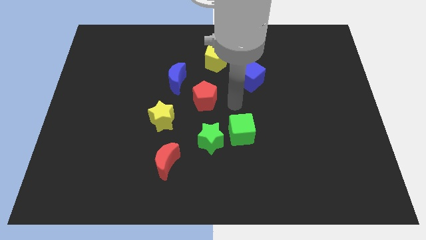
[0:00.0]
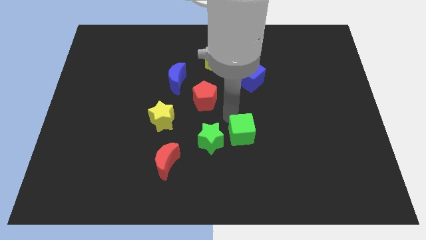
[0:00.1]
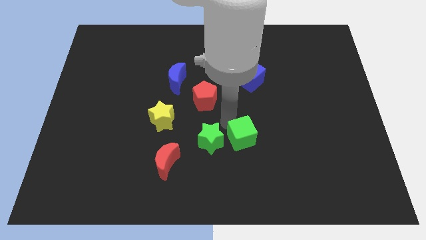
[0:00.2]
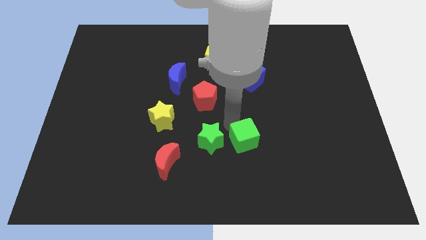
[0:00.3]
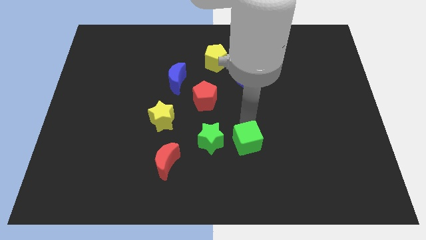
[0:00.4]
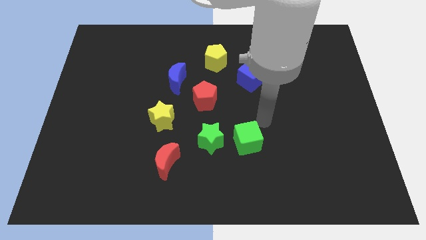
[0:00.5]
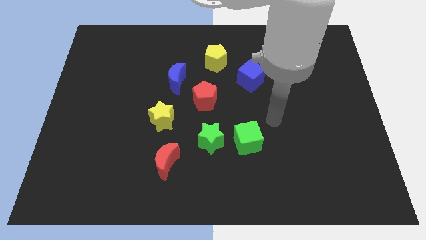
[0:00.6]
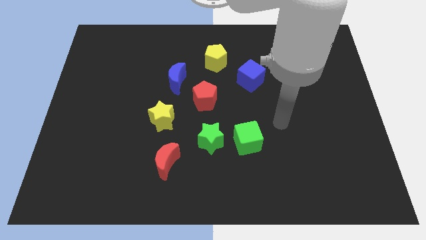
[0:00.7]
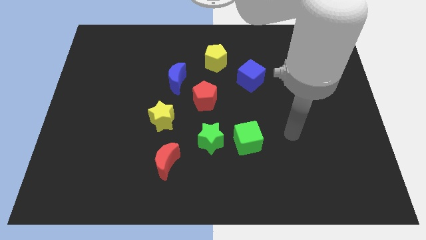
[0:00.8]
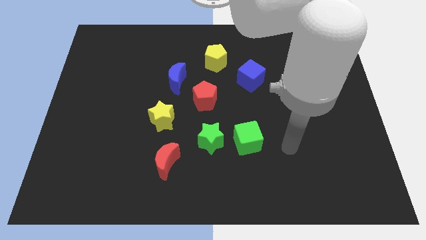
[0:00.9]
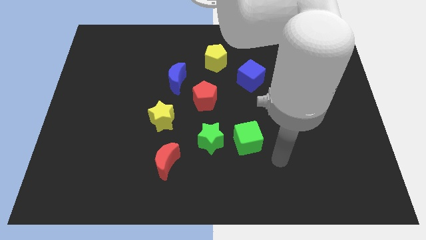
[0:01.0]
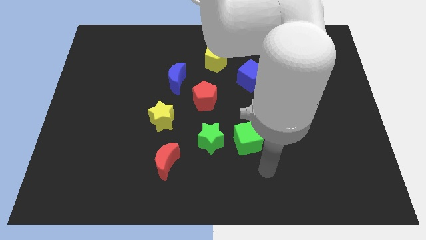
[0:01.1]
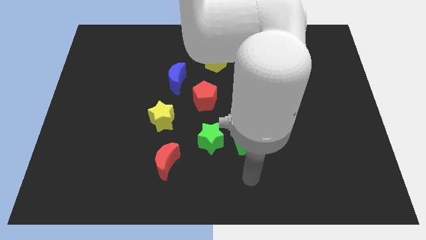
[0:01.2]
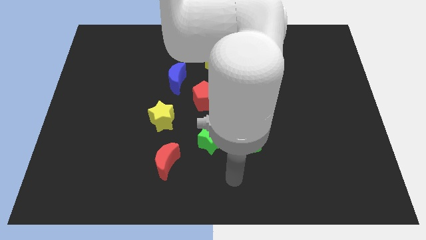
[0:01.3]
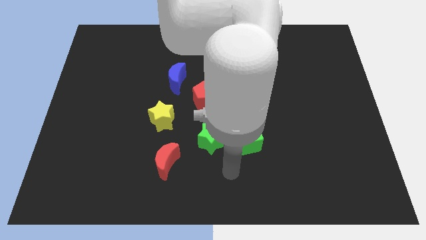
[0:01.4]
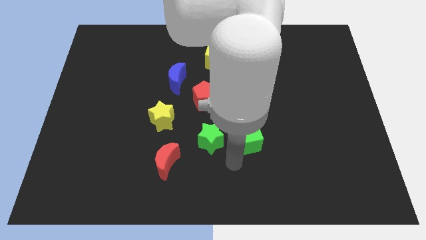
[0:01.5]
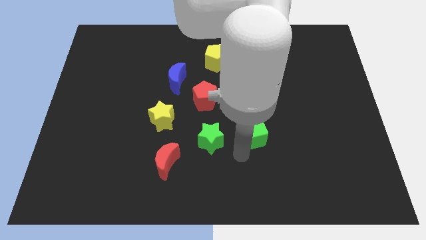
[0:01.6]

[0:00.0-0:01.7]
push the green cube to the right side of the green star

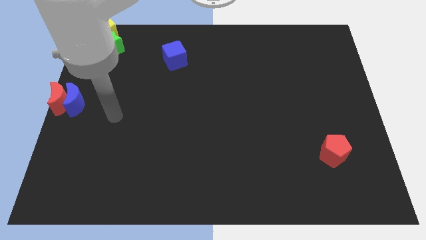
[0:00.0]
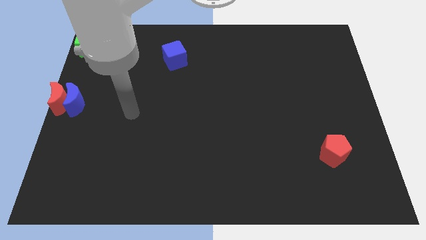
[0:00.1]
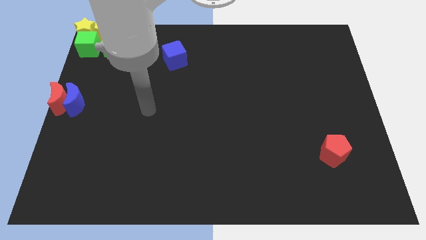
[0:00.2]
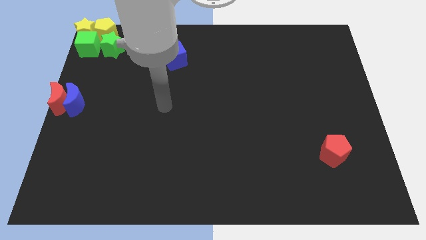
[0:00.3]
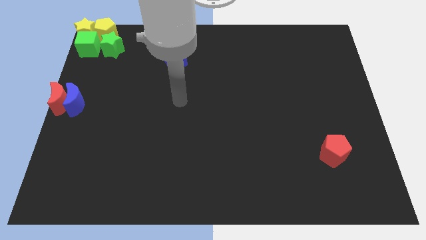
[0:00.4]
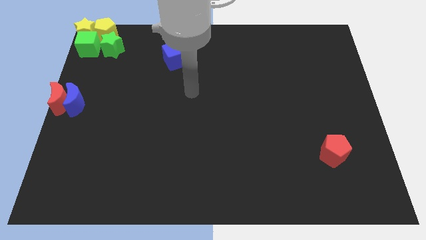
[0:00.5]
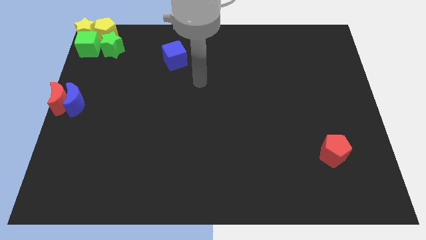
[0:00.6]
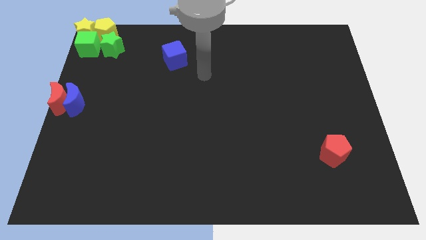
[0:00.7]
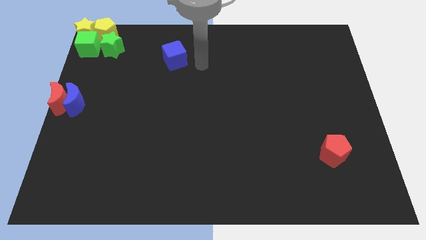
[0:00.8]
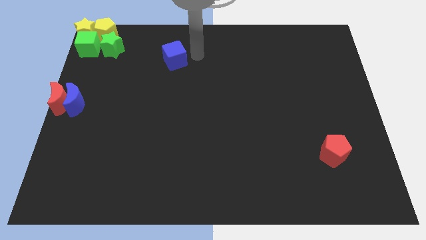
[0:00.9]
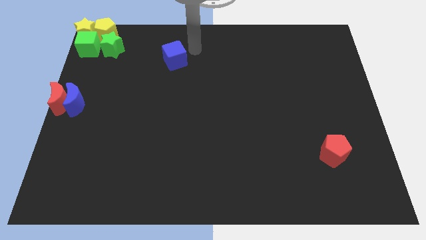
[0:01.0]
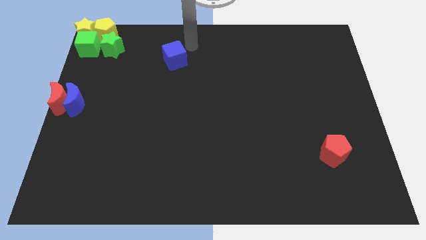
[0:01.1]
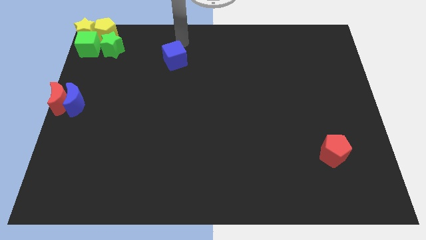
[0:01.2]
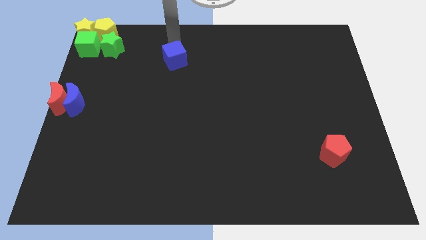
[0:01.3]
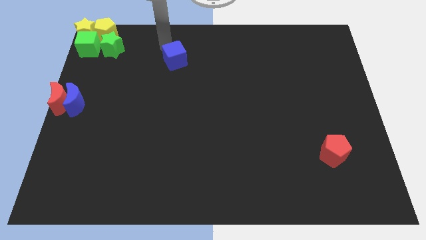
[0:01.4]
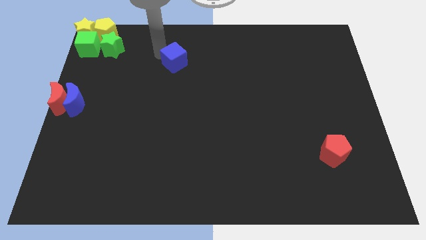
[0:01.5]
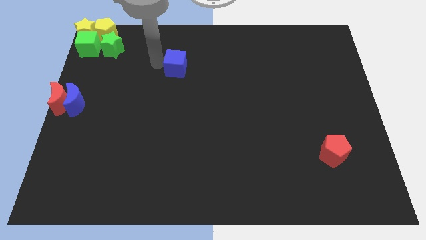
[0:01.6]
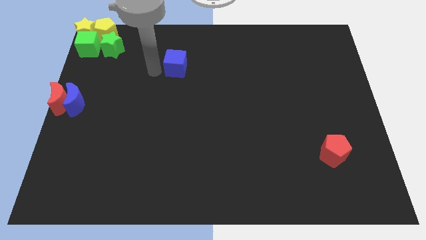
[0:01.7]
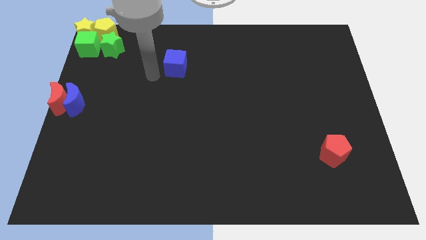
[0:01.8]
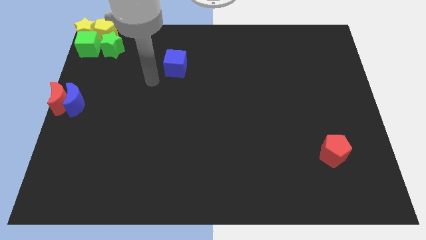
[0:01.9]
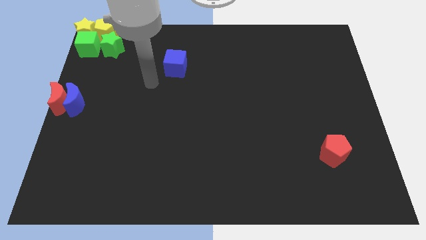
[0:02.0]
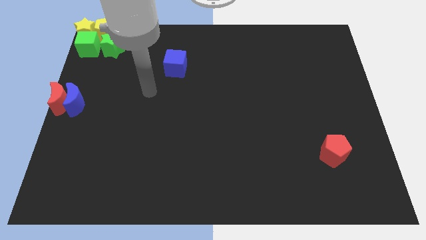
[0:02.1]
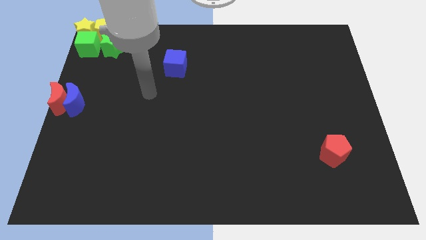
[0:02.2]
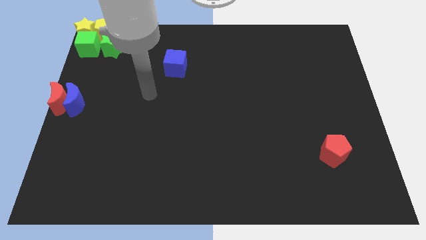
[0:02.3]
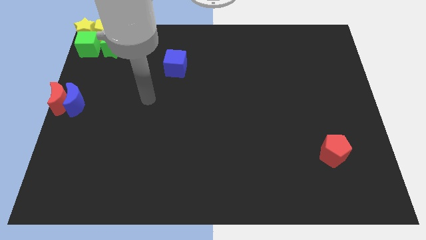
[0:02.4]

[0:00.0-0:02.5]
place the blue cube to the center

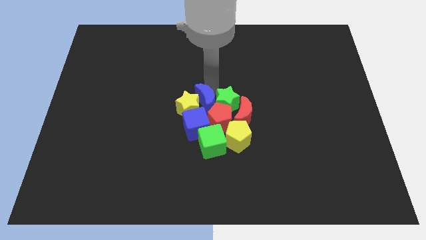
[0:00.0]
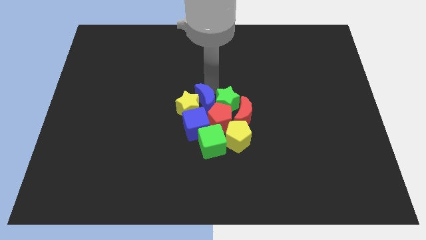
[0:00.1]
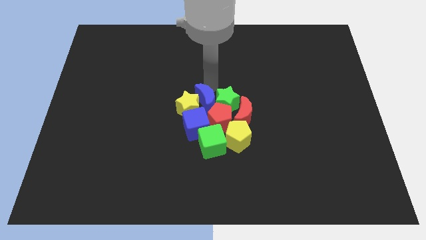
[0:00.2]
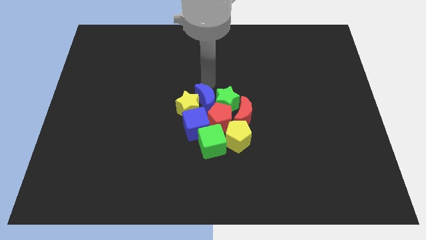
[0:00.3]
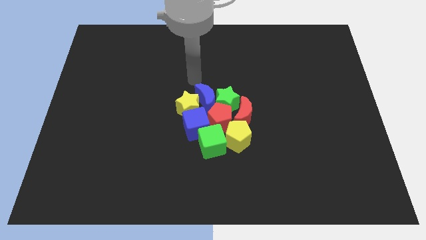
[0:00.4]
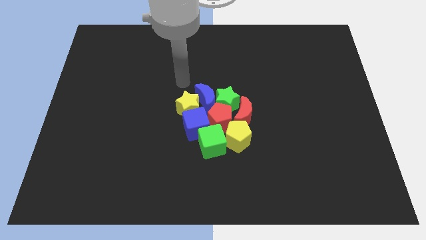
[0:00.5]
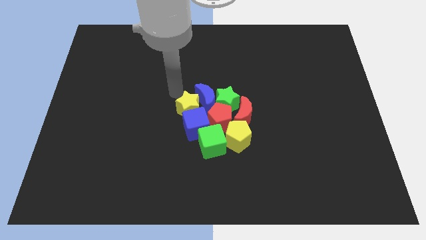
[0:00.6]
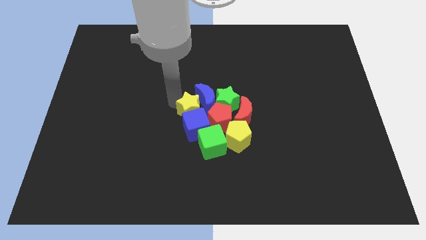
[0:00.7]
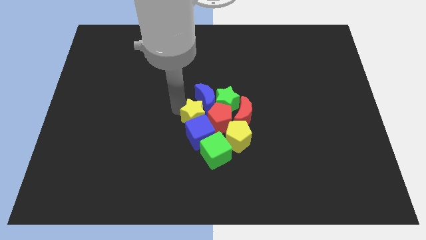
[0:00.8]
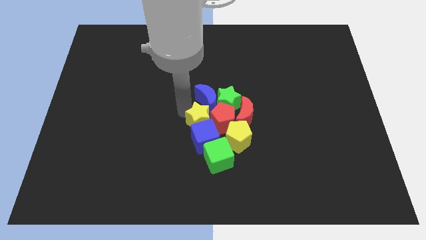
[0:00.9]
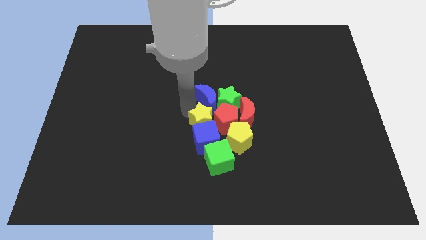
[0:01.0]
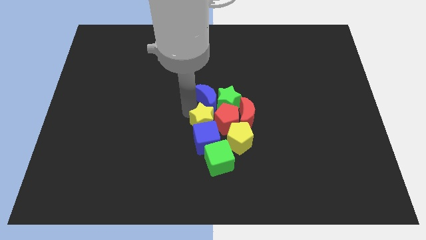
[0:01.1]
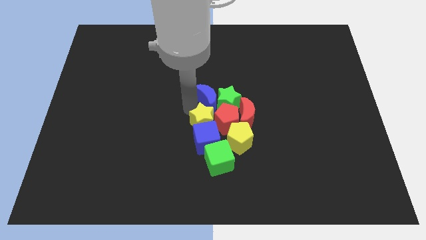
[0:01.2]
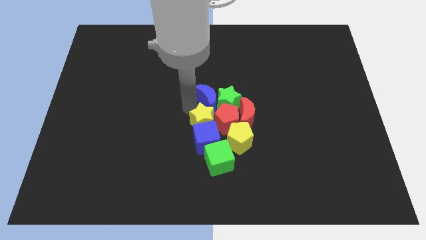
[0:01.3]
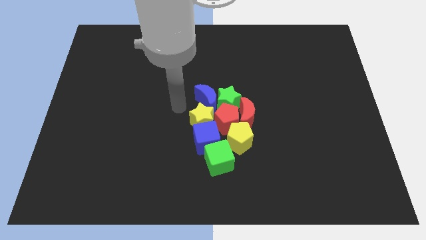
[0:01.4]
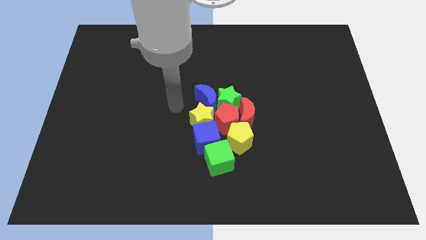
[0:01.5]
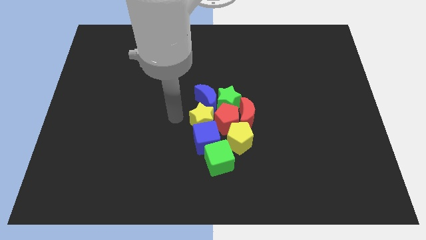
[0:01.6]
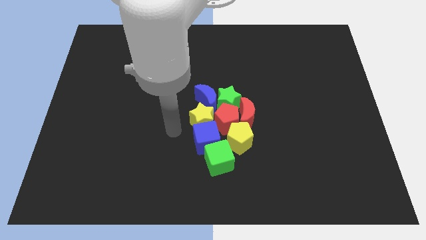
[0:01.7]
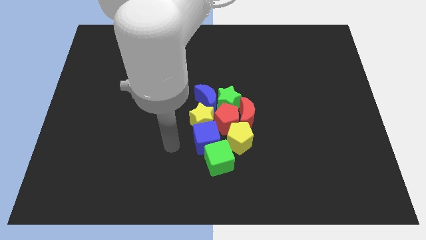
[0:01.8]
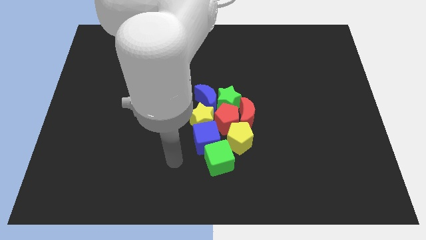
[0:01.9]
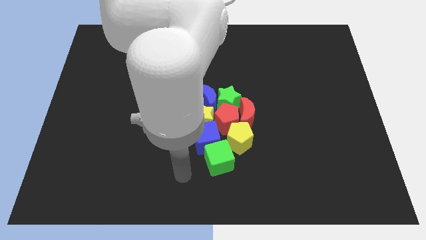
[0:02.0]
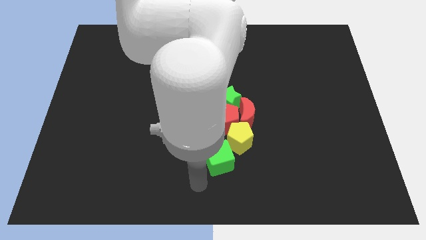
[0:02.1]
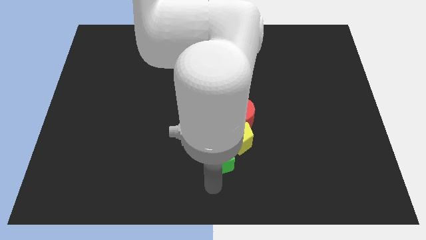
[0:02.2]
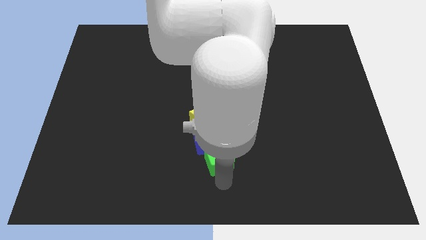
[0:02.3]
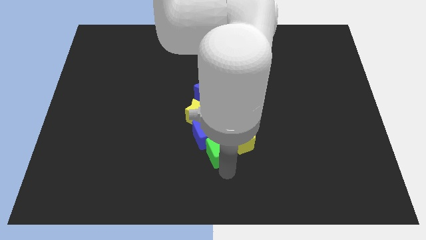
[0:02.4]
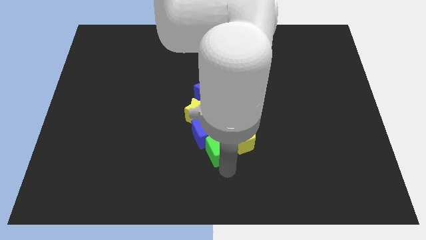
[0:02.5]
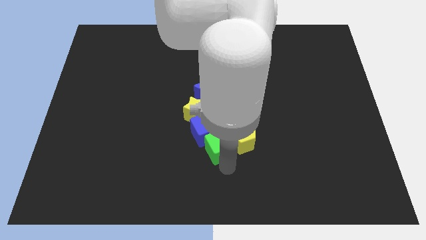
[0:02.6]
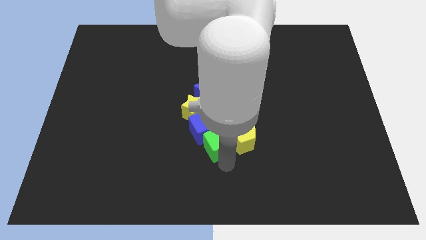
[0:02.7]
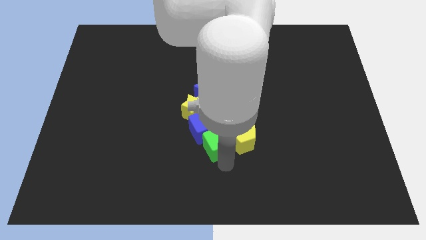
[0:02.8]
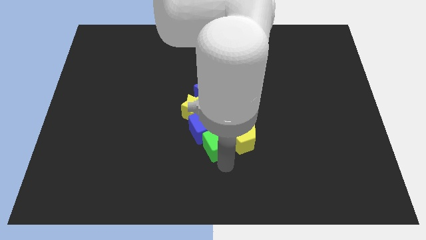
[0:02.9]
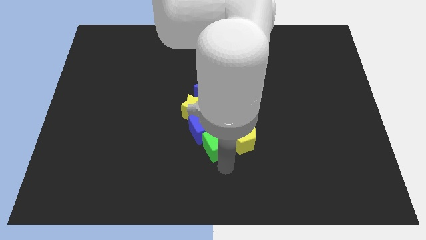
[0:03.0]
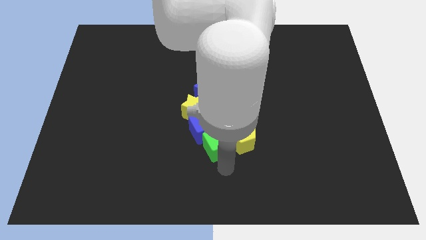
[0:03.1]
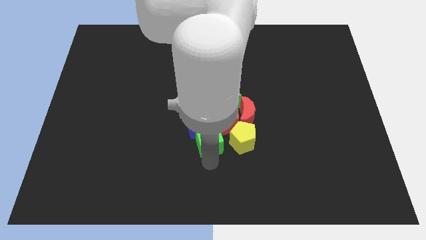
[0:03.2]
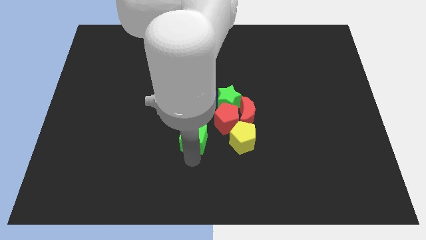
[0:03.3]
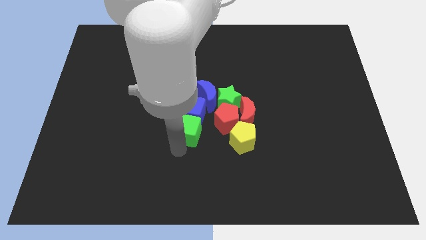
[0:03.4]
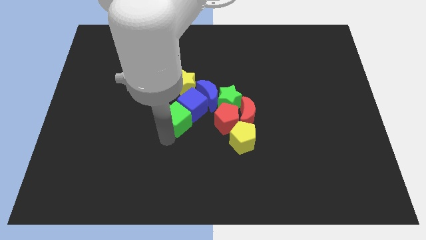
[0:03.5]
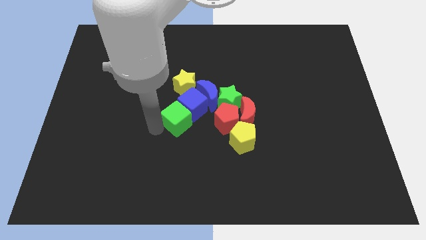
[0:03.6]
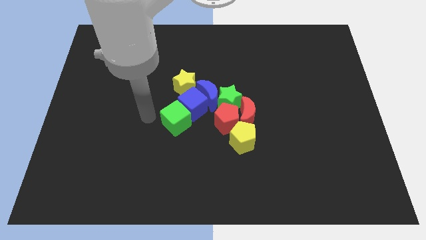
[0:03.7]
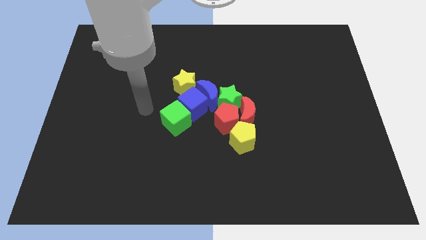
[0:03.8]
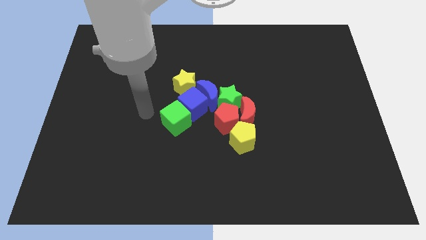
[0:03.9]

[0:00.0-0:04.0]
place the blue cube towards the left side of the blue crescent with green cube yellow star

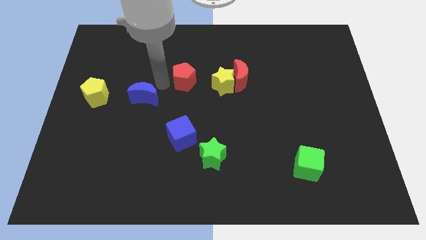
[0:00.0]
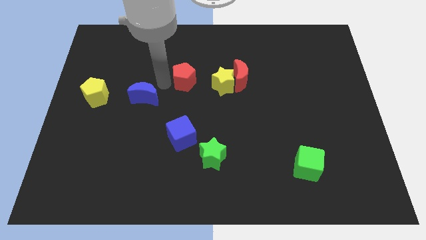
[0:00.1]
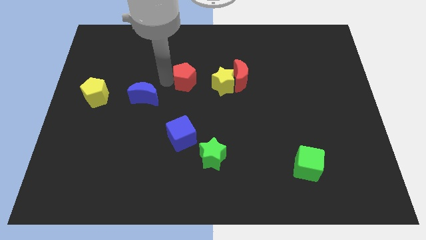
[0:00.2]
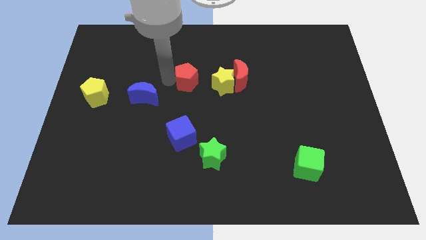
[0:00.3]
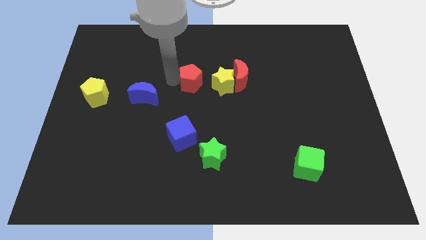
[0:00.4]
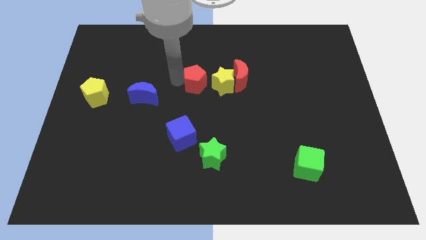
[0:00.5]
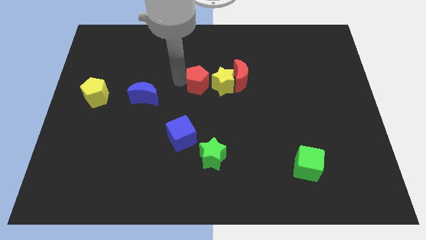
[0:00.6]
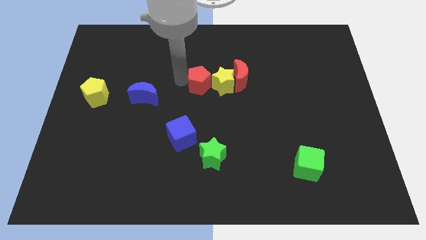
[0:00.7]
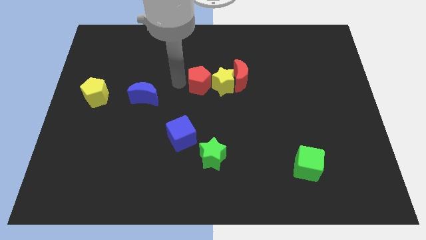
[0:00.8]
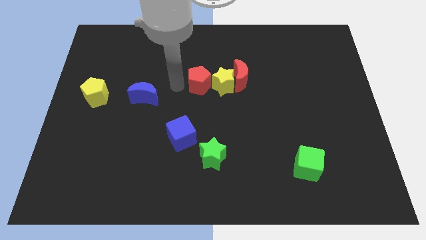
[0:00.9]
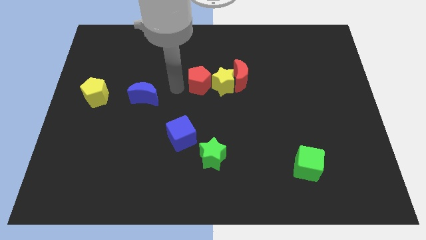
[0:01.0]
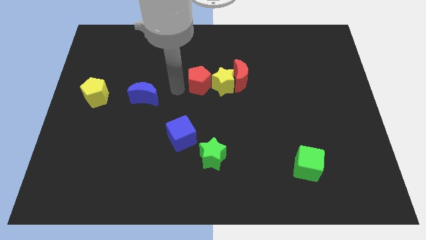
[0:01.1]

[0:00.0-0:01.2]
push the red pentagon close left to the yellow star
